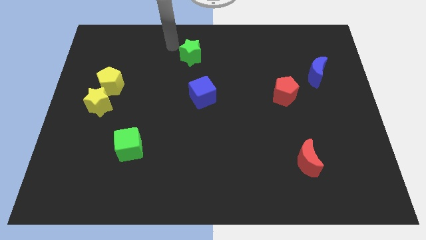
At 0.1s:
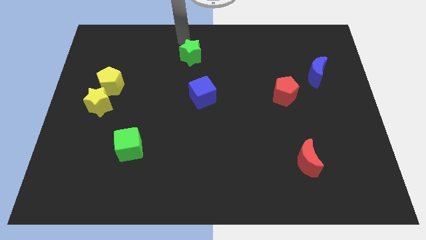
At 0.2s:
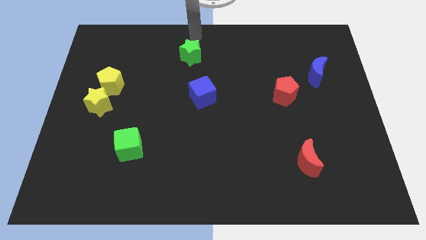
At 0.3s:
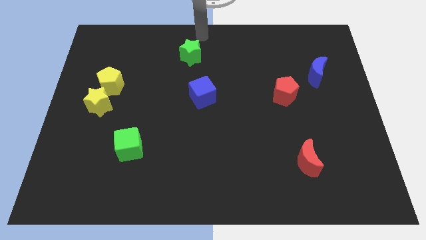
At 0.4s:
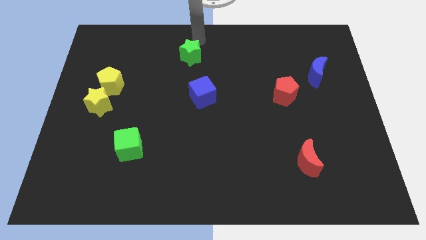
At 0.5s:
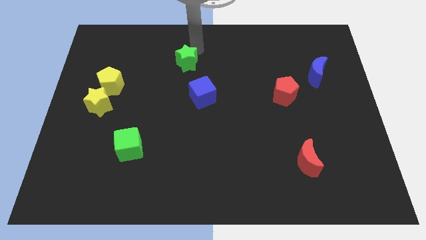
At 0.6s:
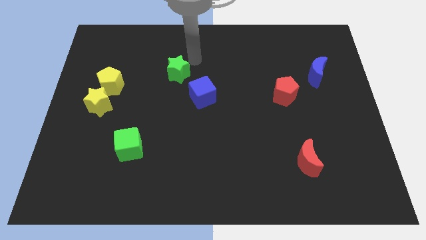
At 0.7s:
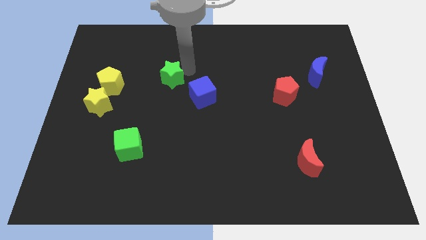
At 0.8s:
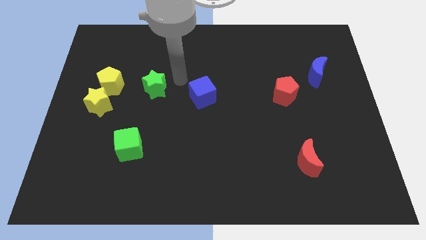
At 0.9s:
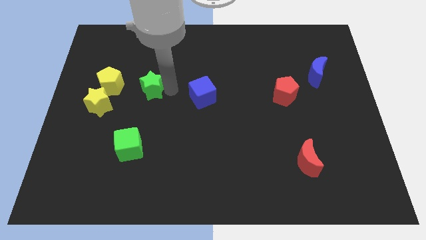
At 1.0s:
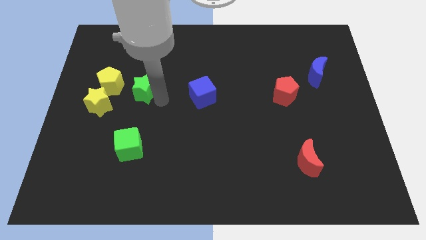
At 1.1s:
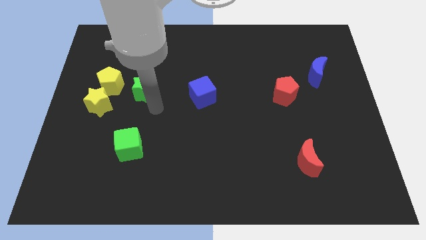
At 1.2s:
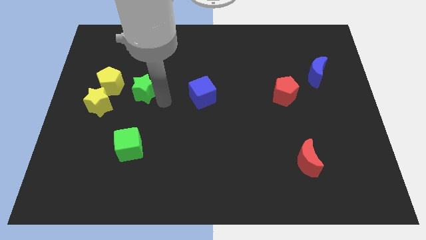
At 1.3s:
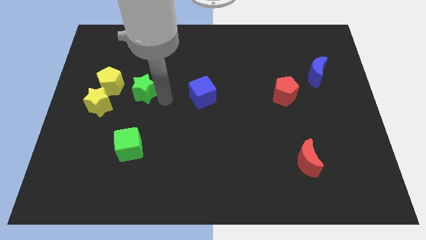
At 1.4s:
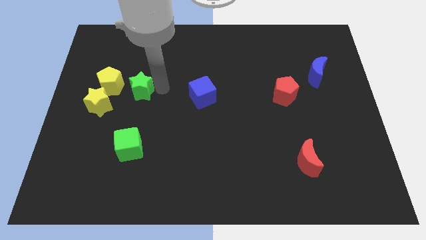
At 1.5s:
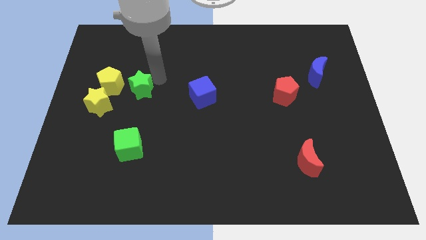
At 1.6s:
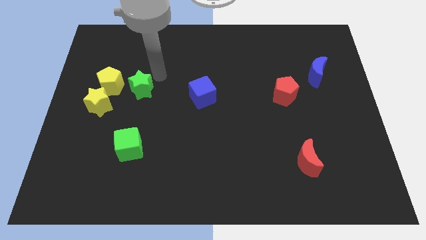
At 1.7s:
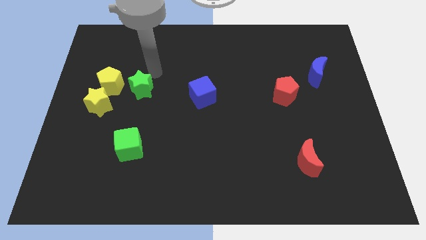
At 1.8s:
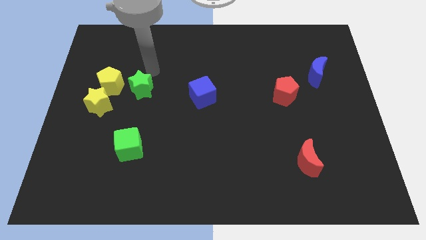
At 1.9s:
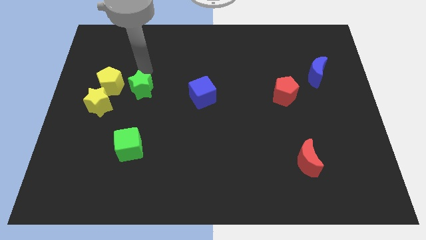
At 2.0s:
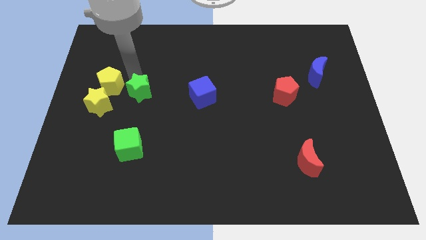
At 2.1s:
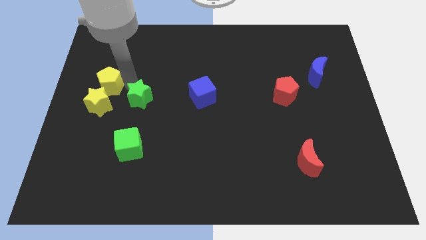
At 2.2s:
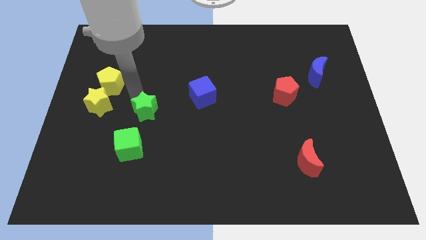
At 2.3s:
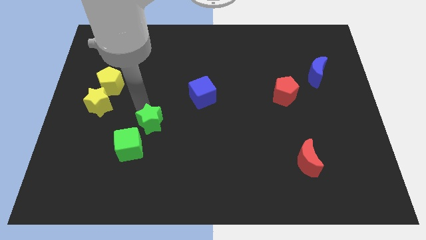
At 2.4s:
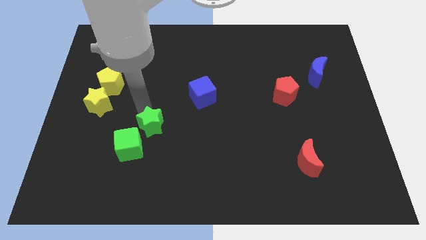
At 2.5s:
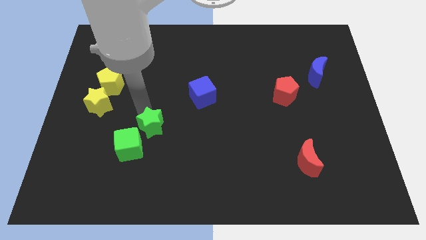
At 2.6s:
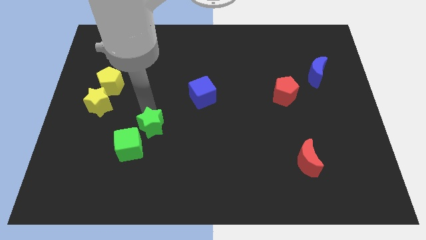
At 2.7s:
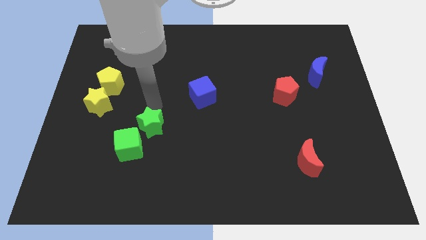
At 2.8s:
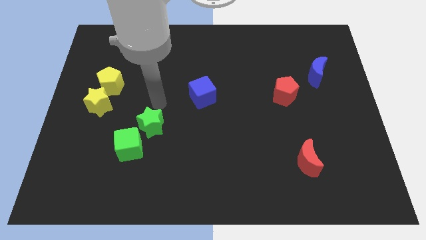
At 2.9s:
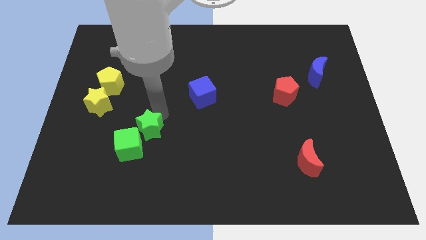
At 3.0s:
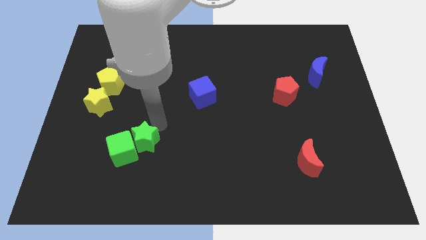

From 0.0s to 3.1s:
move the green star towards the right side of the green cube

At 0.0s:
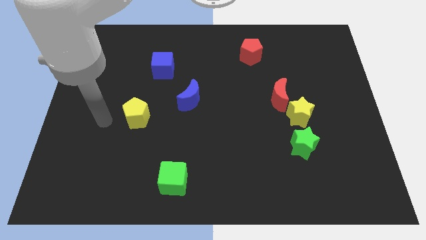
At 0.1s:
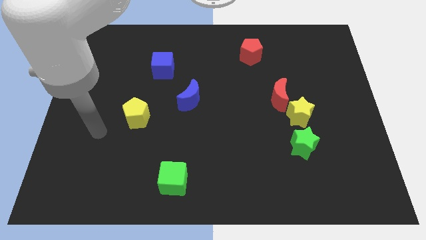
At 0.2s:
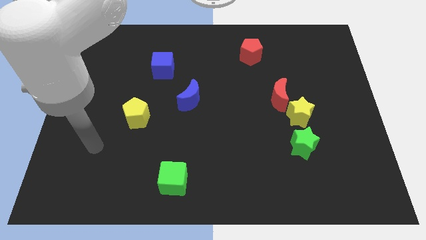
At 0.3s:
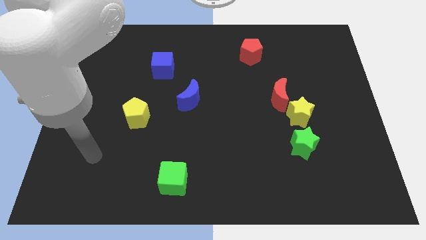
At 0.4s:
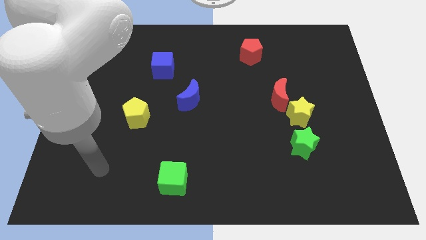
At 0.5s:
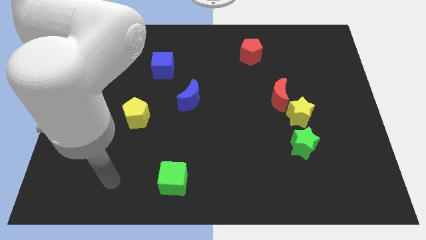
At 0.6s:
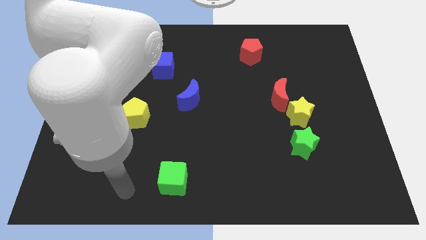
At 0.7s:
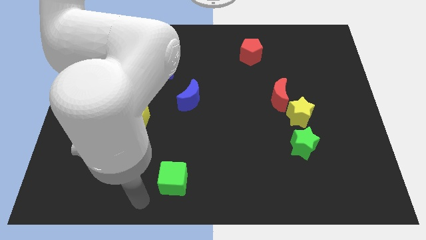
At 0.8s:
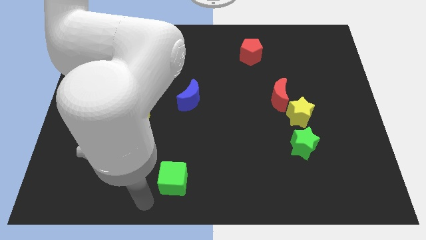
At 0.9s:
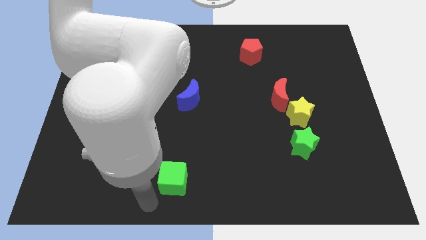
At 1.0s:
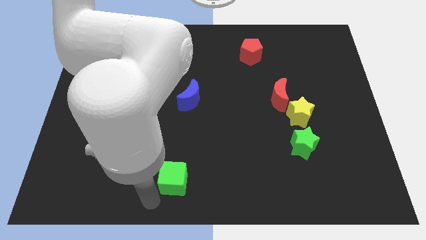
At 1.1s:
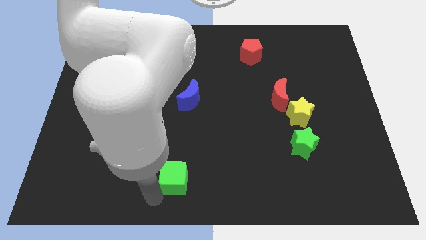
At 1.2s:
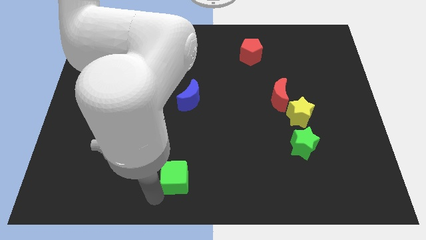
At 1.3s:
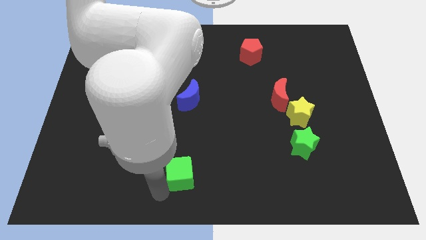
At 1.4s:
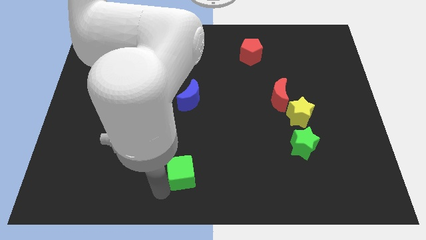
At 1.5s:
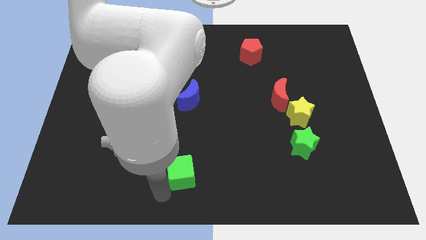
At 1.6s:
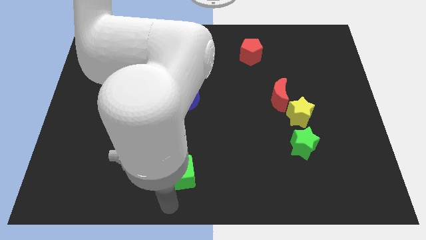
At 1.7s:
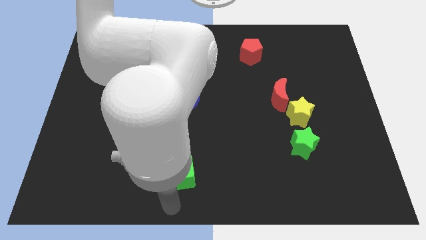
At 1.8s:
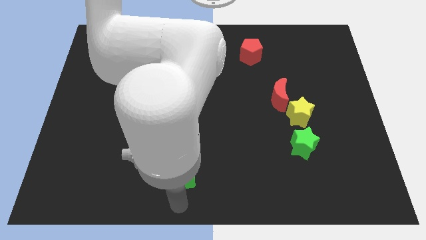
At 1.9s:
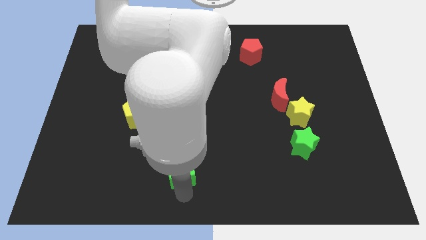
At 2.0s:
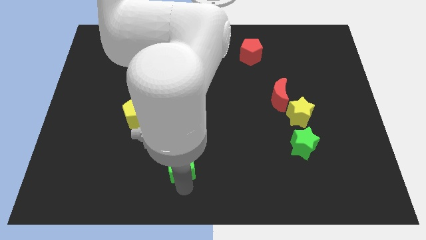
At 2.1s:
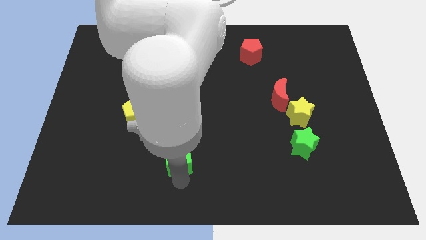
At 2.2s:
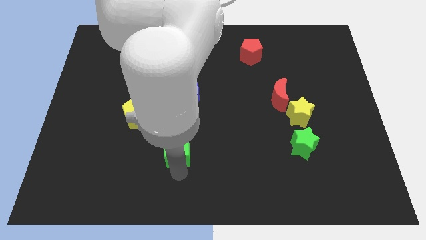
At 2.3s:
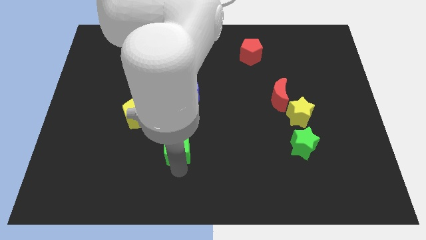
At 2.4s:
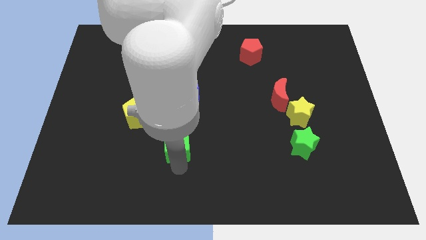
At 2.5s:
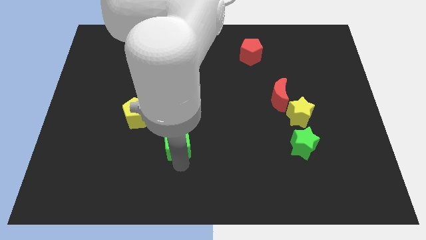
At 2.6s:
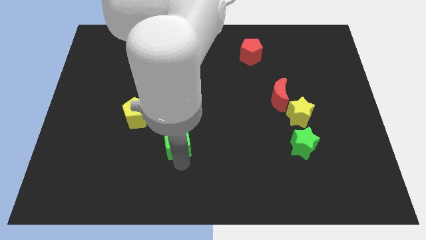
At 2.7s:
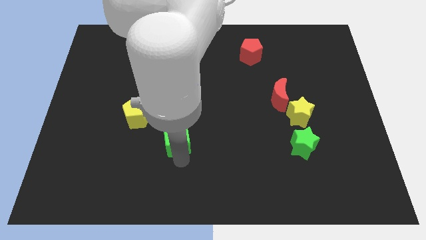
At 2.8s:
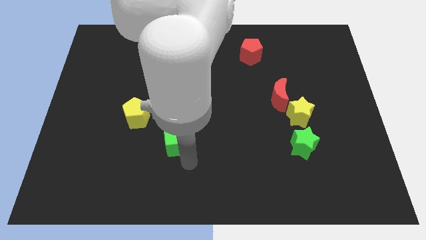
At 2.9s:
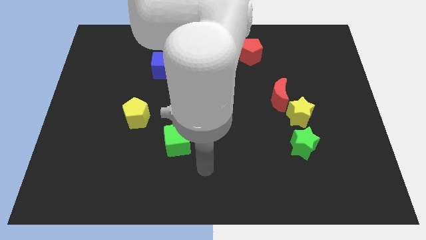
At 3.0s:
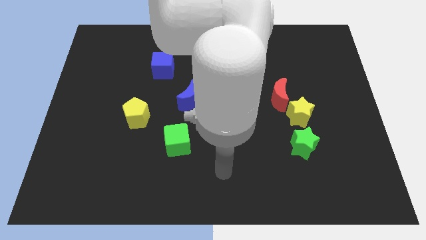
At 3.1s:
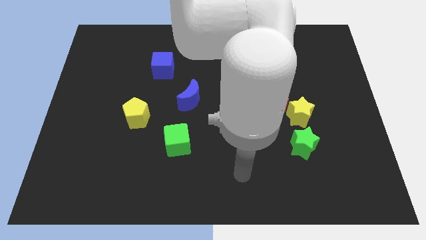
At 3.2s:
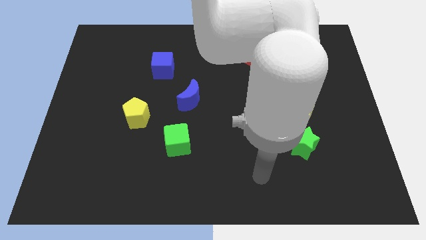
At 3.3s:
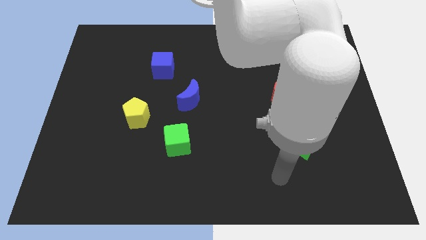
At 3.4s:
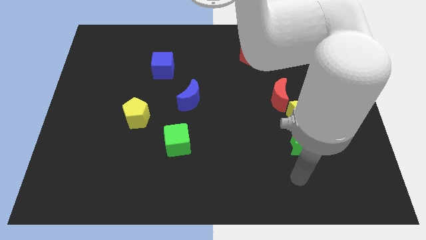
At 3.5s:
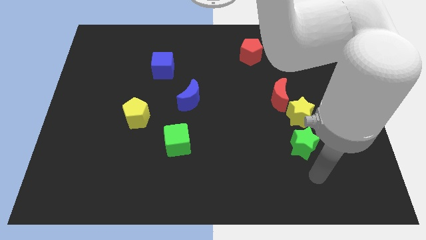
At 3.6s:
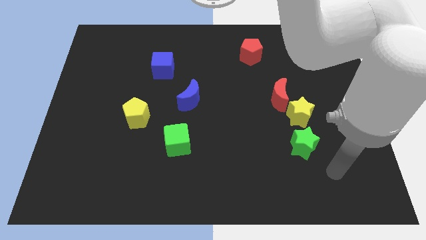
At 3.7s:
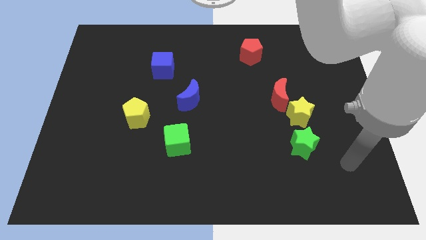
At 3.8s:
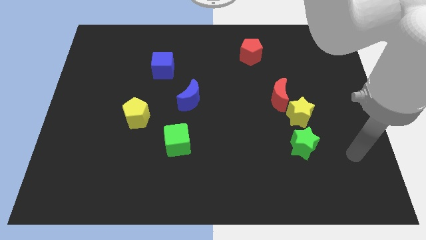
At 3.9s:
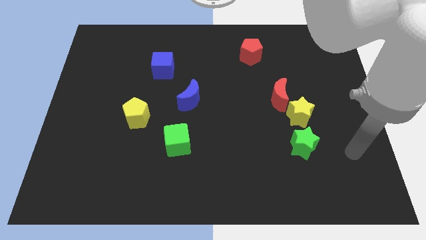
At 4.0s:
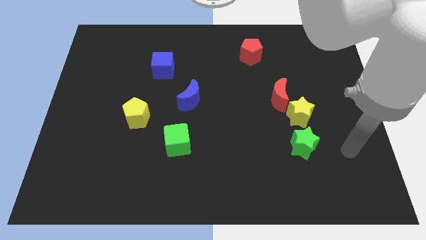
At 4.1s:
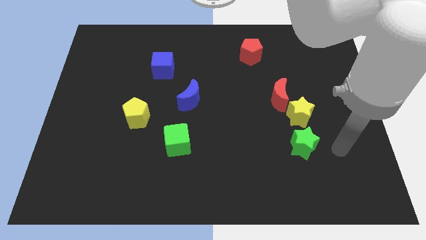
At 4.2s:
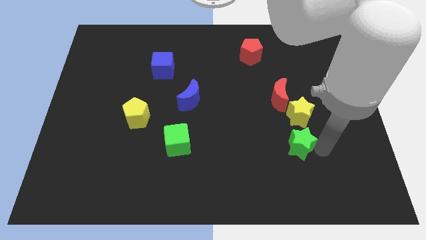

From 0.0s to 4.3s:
put the green cube horizontally left of the green star

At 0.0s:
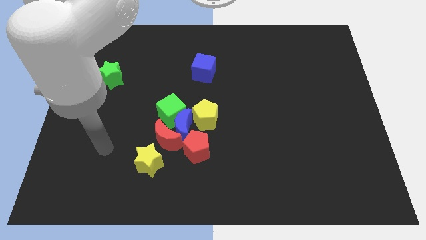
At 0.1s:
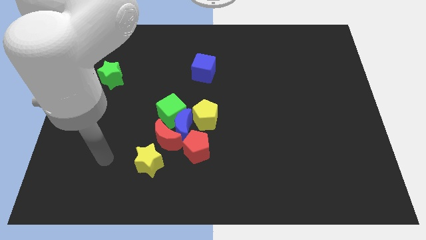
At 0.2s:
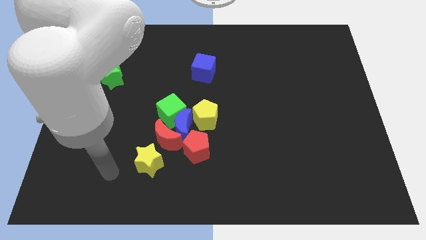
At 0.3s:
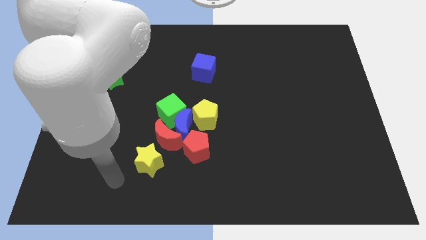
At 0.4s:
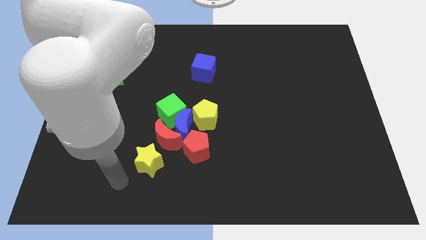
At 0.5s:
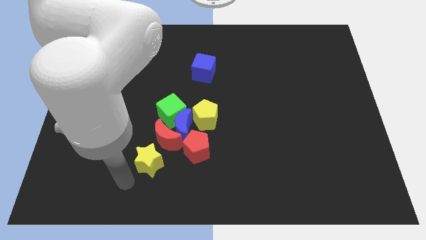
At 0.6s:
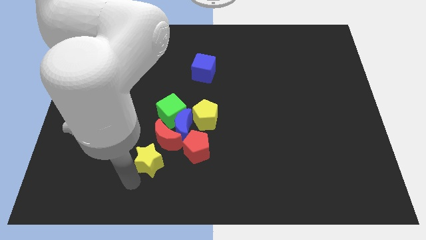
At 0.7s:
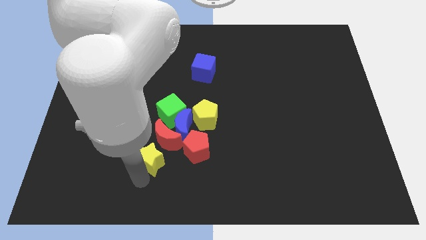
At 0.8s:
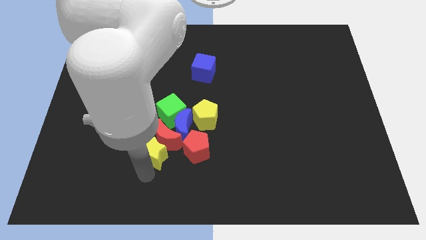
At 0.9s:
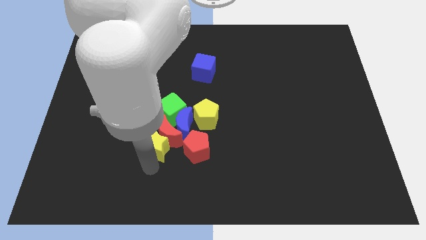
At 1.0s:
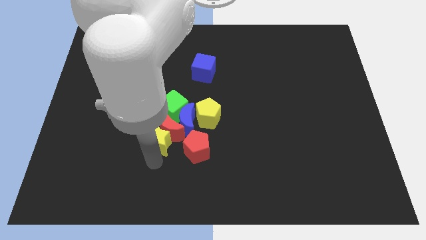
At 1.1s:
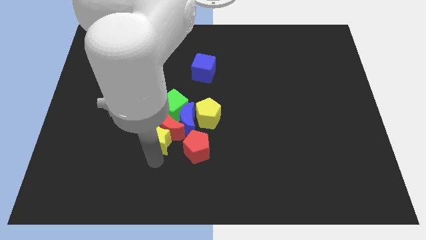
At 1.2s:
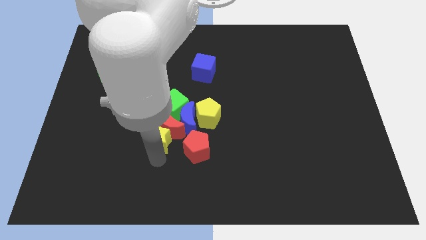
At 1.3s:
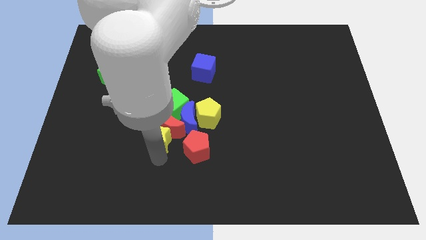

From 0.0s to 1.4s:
move the yellow star into the red crescent

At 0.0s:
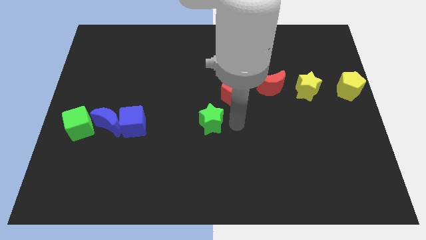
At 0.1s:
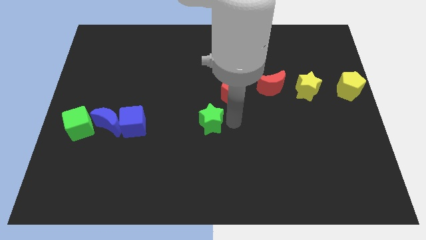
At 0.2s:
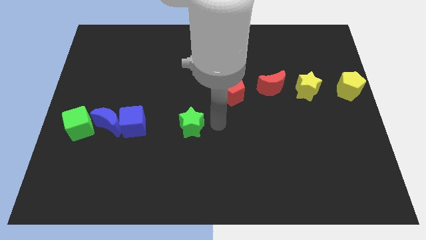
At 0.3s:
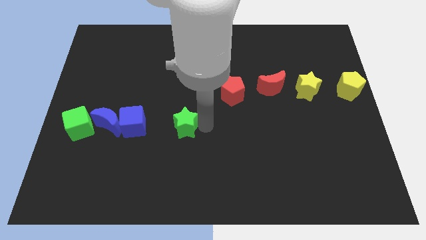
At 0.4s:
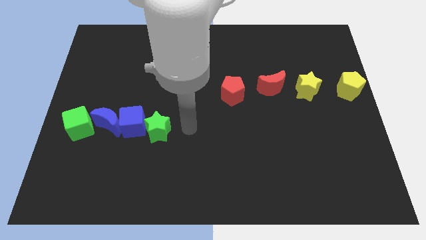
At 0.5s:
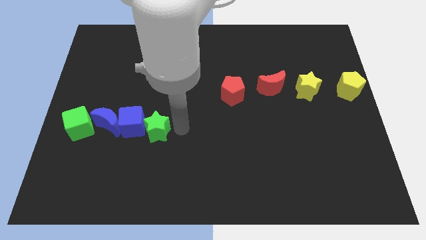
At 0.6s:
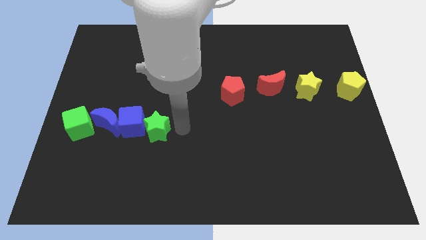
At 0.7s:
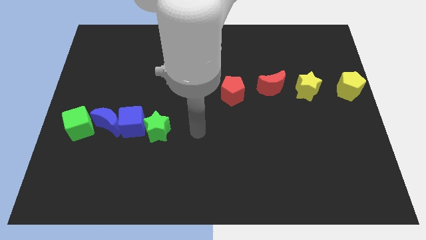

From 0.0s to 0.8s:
push the green star into the right of the blue cube
